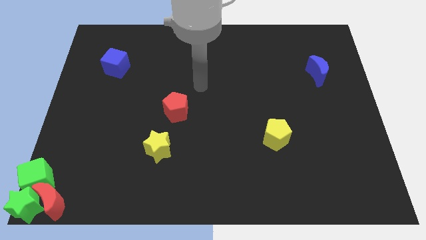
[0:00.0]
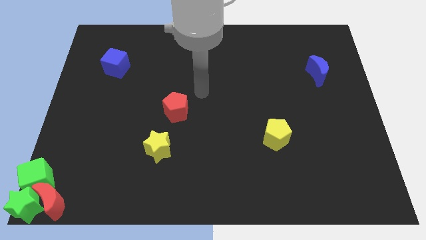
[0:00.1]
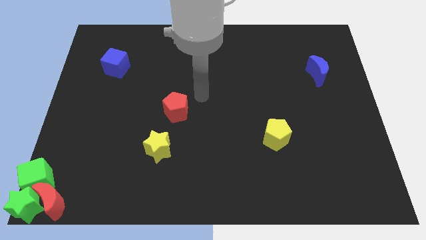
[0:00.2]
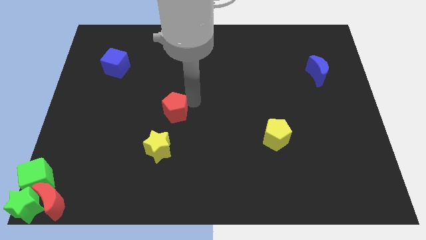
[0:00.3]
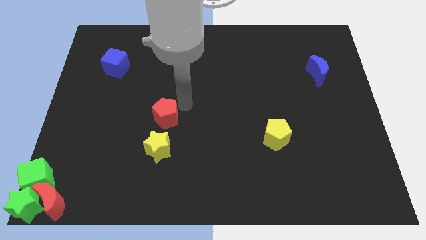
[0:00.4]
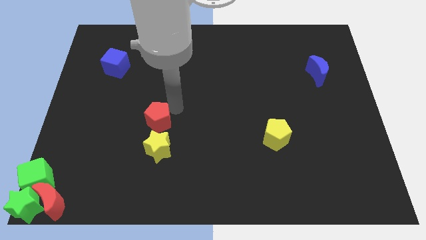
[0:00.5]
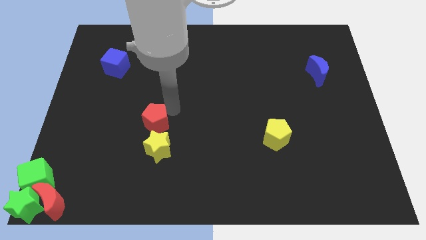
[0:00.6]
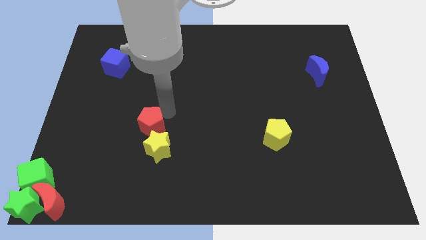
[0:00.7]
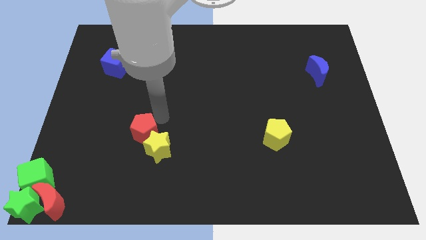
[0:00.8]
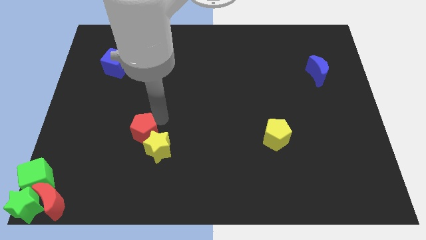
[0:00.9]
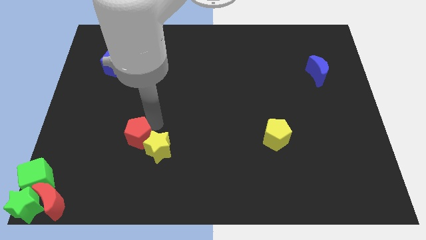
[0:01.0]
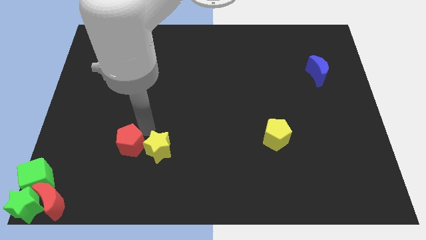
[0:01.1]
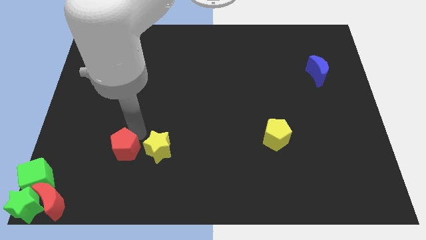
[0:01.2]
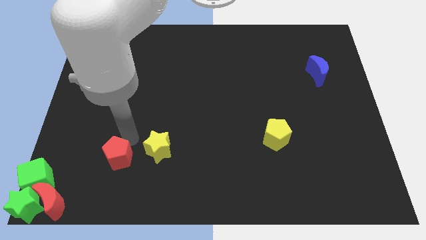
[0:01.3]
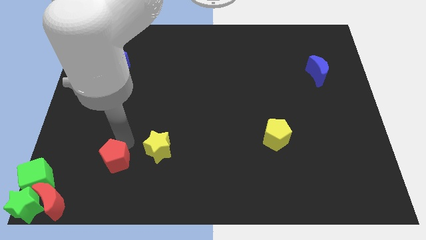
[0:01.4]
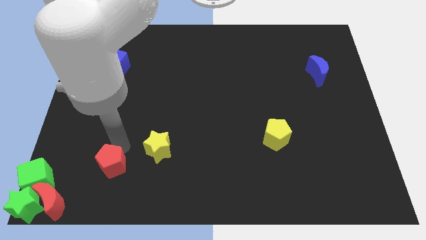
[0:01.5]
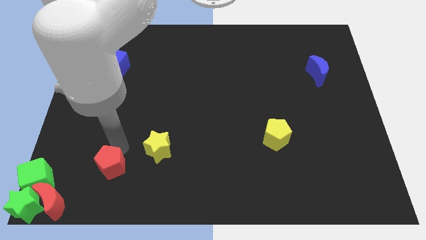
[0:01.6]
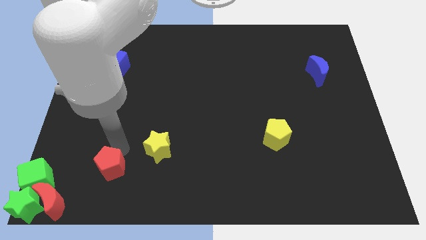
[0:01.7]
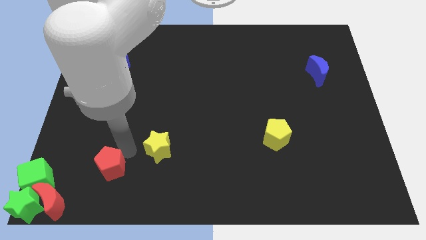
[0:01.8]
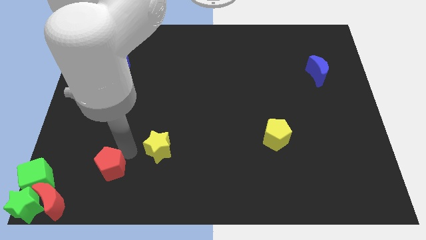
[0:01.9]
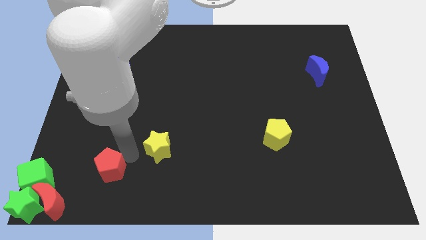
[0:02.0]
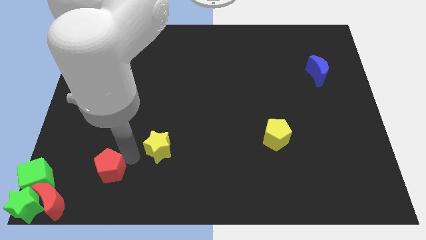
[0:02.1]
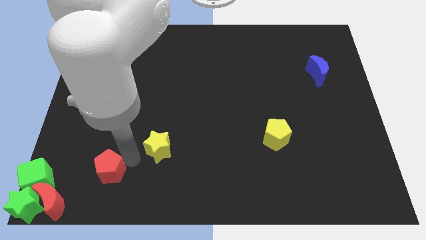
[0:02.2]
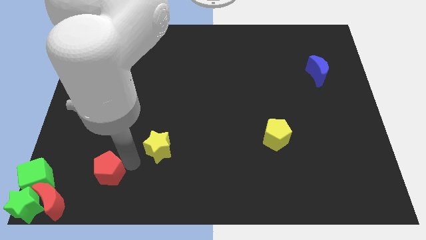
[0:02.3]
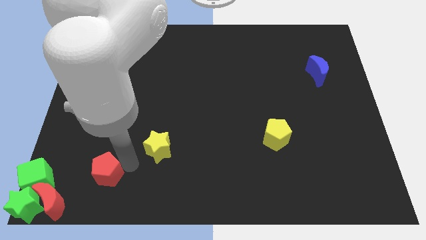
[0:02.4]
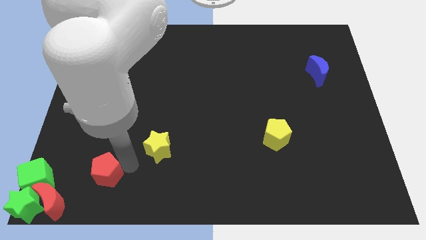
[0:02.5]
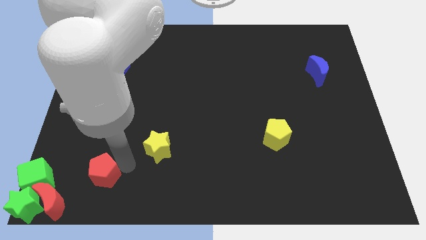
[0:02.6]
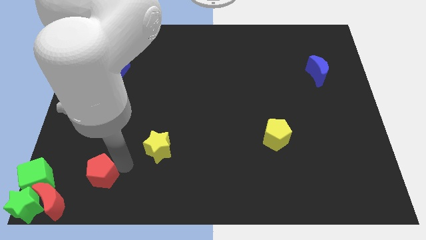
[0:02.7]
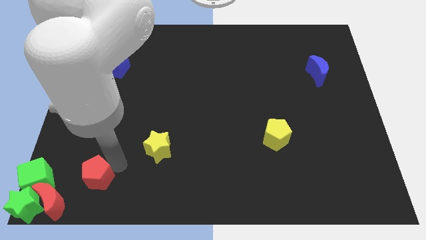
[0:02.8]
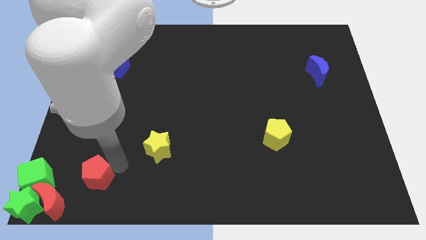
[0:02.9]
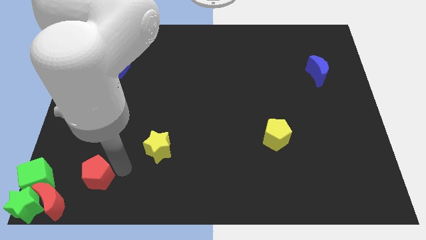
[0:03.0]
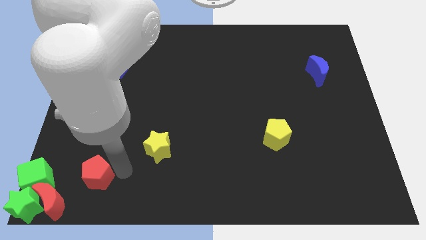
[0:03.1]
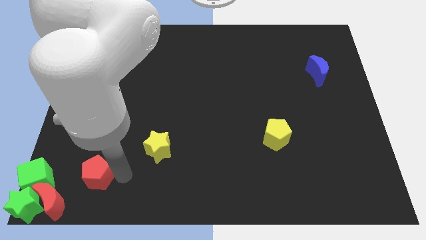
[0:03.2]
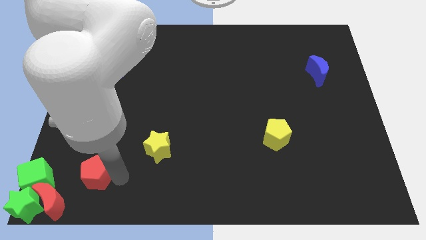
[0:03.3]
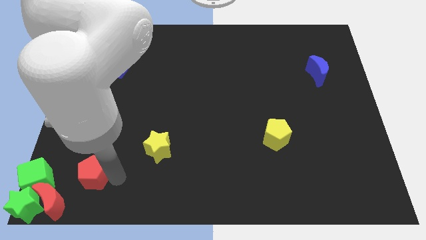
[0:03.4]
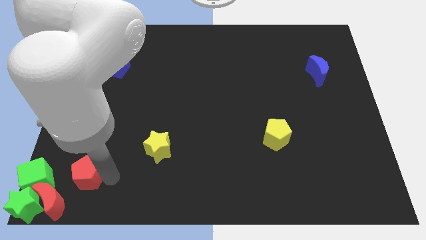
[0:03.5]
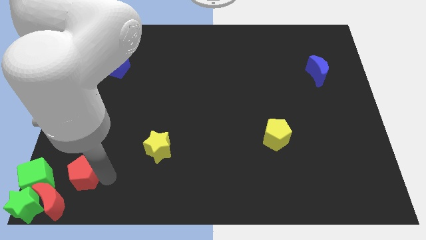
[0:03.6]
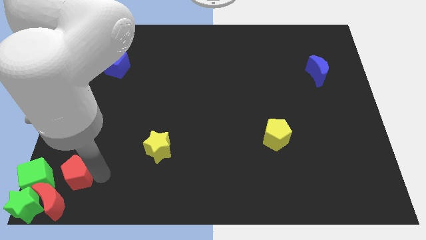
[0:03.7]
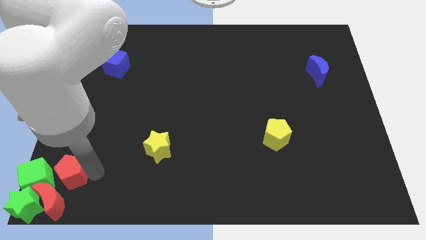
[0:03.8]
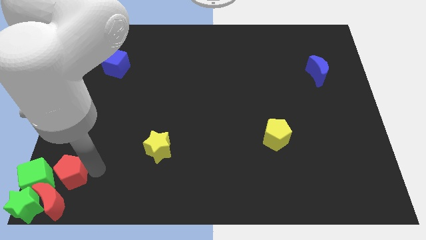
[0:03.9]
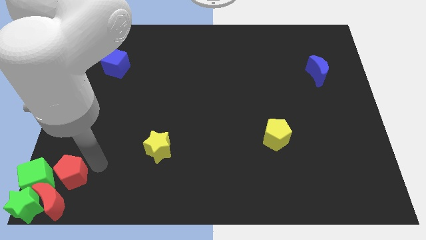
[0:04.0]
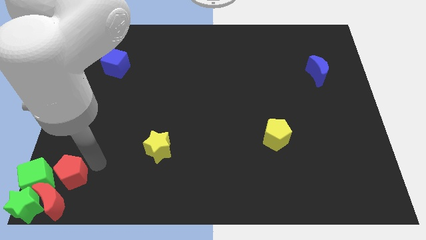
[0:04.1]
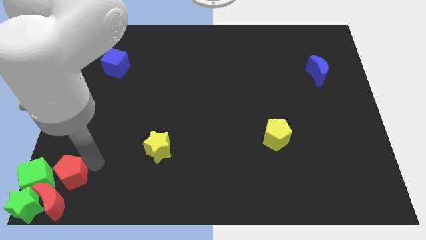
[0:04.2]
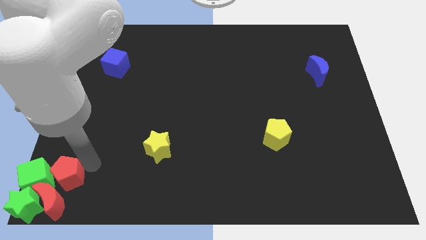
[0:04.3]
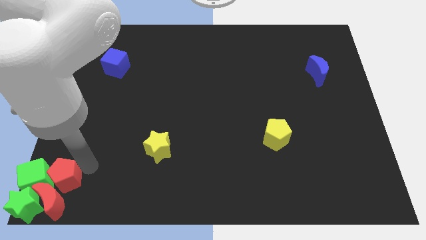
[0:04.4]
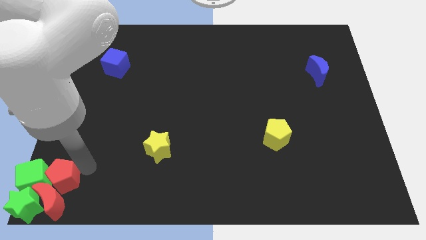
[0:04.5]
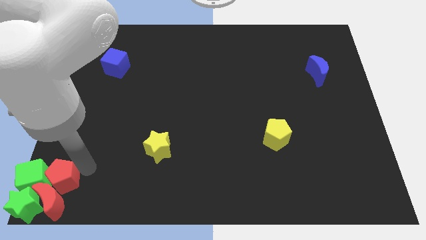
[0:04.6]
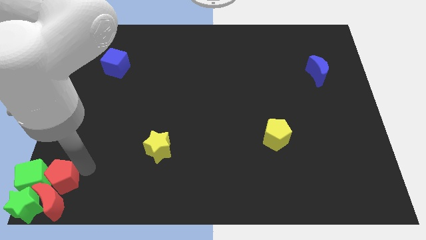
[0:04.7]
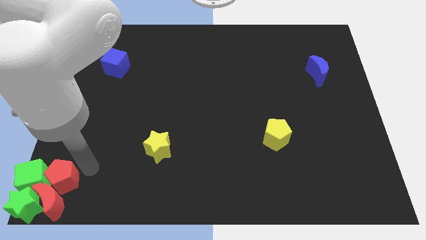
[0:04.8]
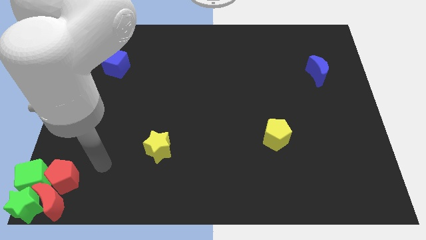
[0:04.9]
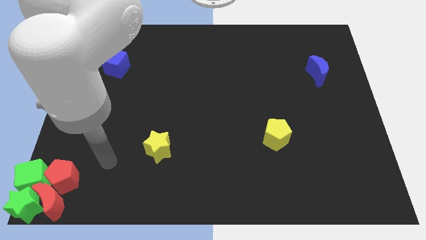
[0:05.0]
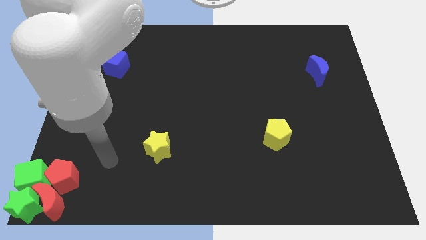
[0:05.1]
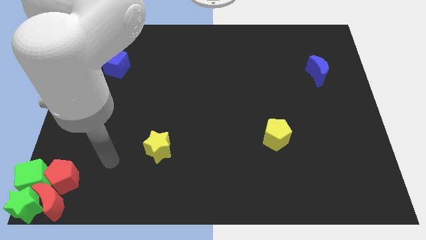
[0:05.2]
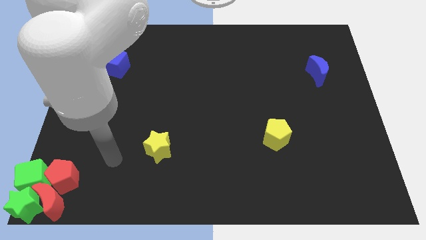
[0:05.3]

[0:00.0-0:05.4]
push the red pentagon into the group of blocks

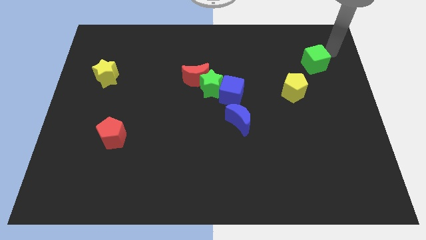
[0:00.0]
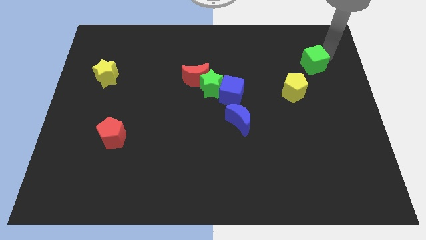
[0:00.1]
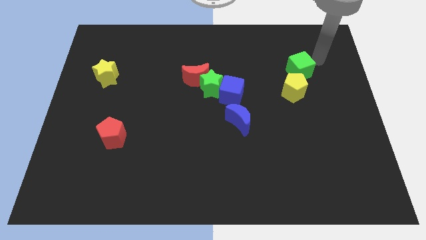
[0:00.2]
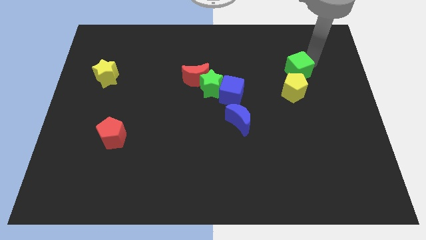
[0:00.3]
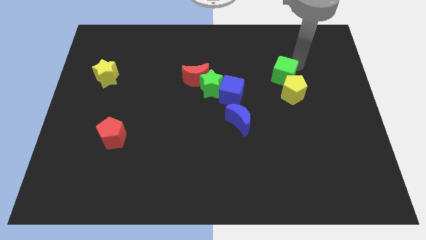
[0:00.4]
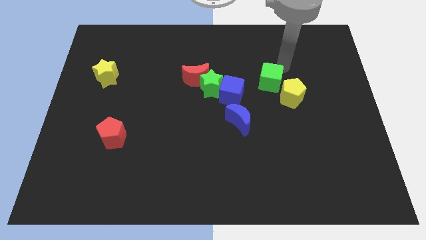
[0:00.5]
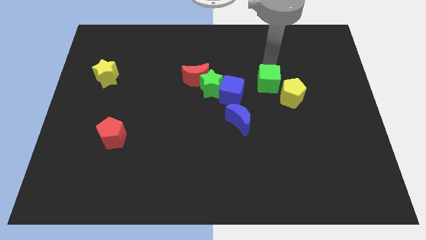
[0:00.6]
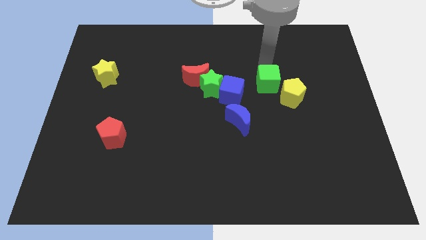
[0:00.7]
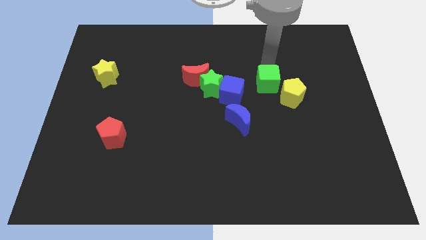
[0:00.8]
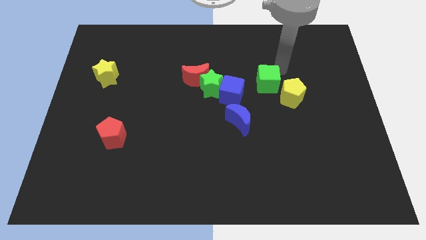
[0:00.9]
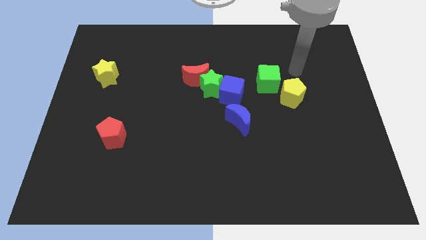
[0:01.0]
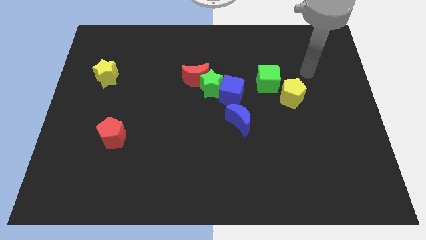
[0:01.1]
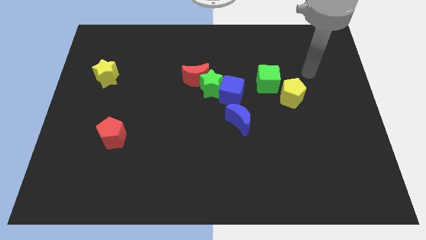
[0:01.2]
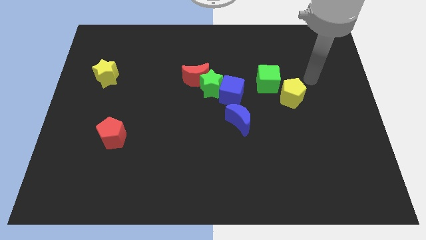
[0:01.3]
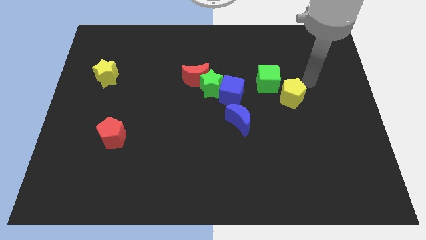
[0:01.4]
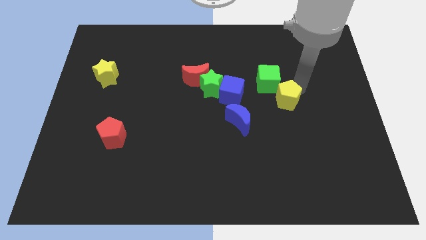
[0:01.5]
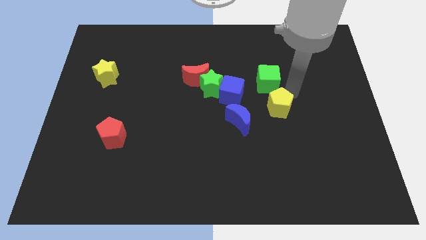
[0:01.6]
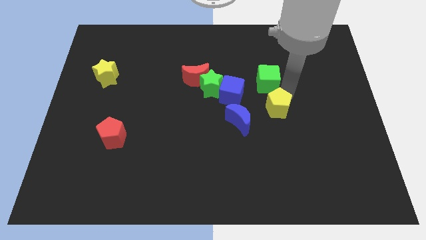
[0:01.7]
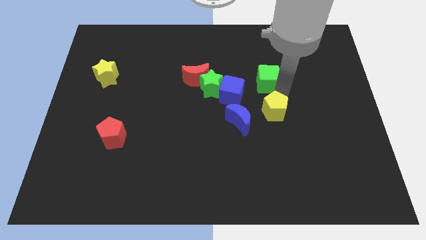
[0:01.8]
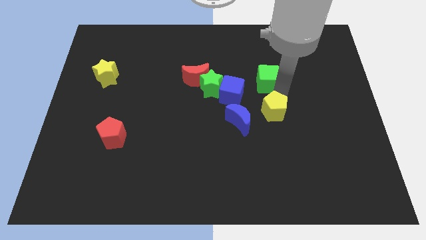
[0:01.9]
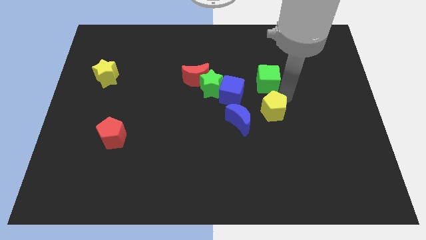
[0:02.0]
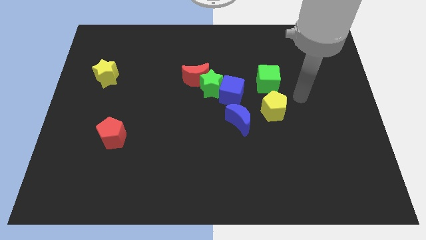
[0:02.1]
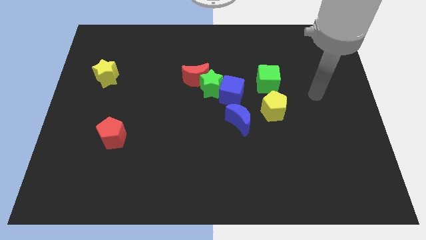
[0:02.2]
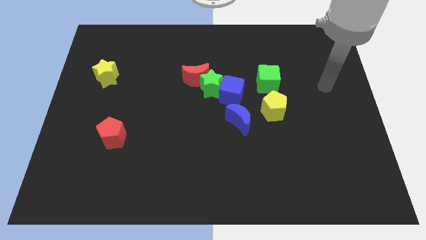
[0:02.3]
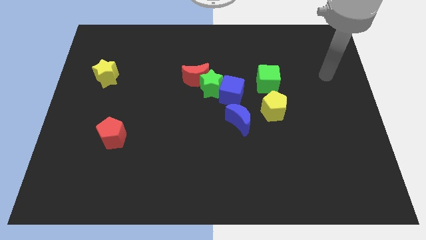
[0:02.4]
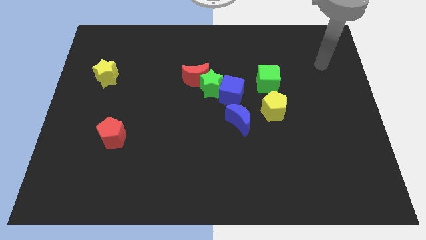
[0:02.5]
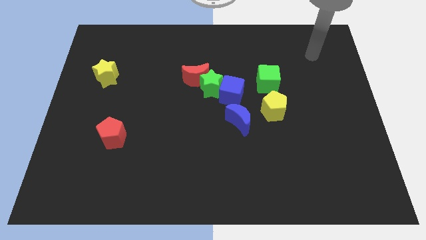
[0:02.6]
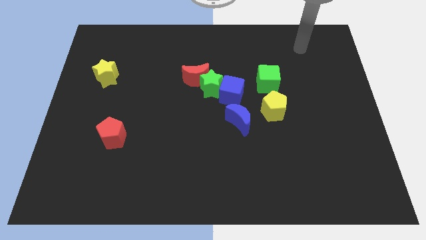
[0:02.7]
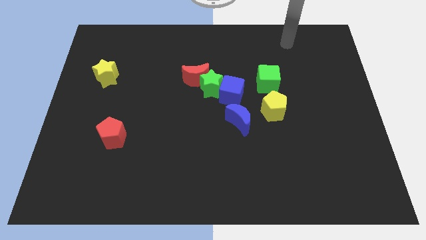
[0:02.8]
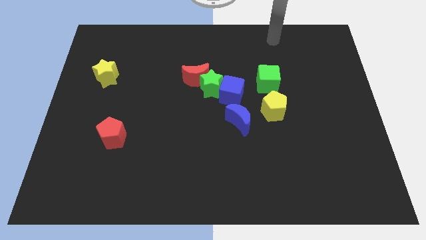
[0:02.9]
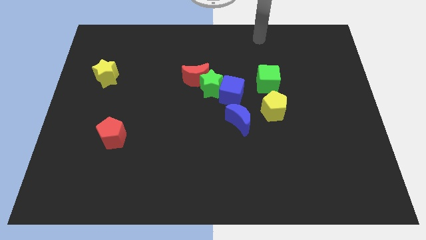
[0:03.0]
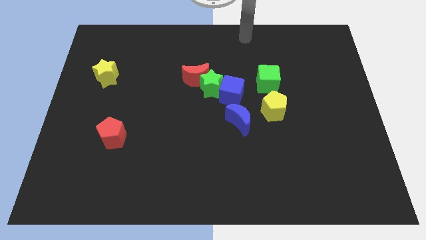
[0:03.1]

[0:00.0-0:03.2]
put the green cube and yellow pentagon at the right side of the blue blocks

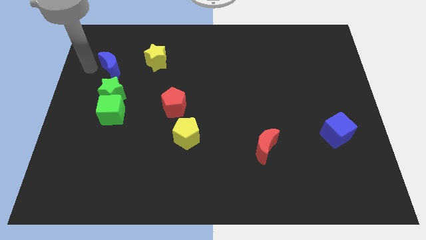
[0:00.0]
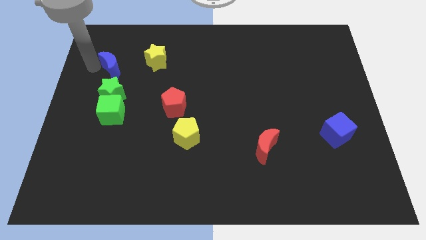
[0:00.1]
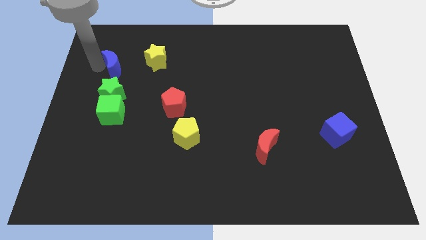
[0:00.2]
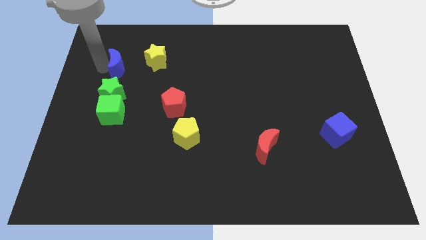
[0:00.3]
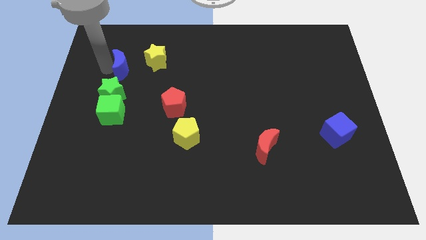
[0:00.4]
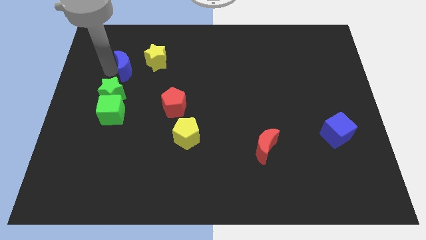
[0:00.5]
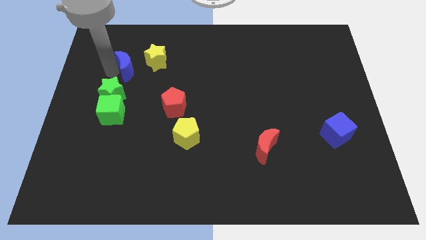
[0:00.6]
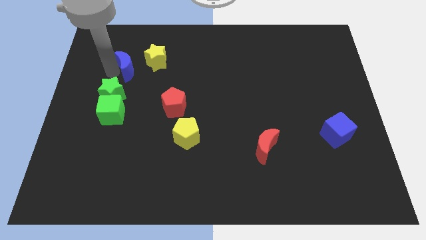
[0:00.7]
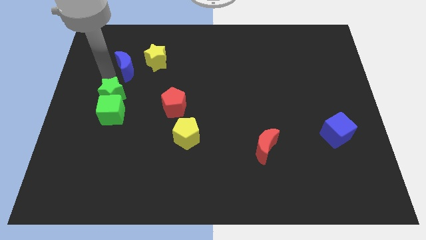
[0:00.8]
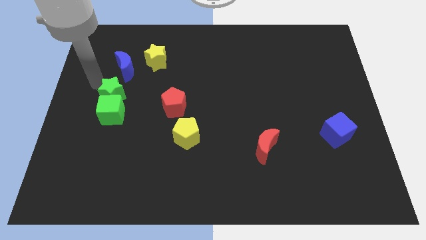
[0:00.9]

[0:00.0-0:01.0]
slightly move the blue moon towards the right
